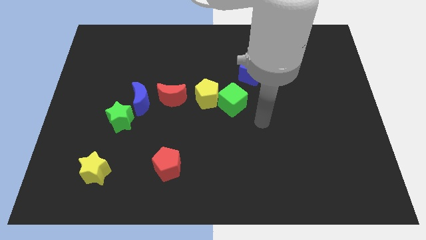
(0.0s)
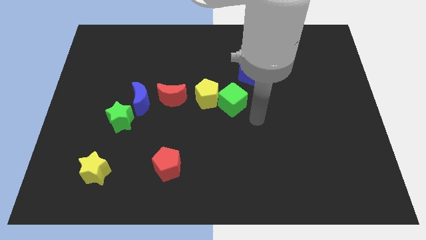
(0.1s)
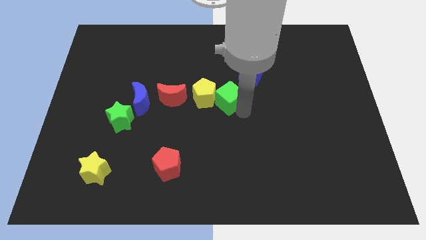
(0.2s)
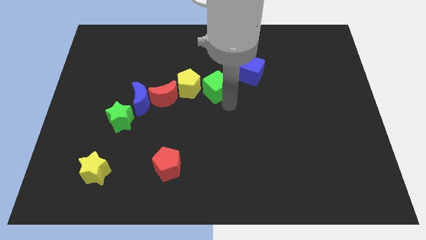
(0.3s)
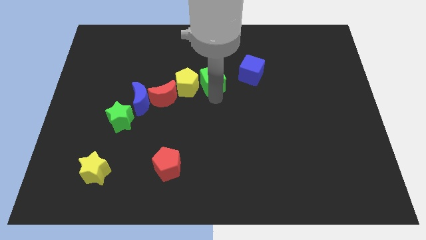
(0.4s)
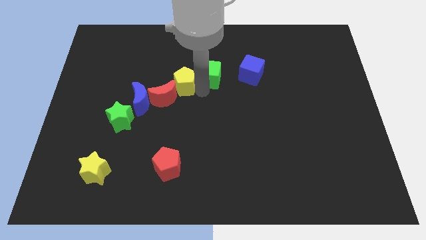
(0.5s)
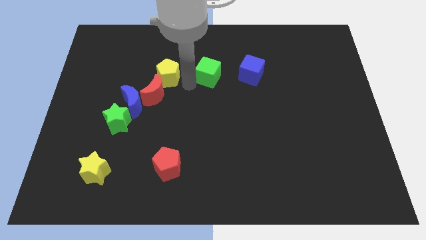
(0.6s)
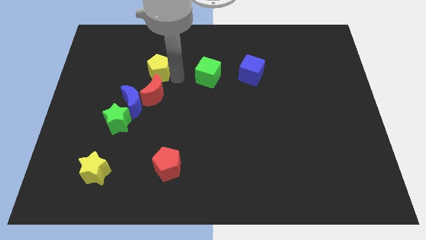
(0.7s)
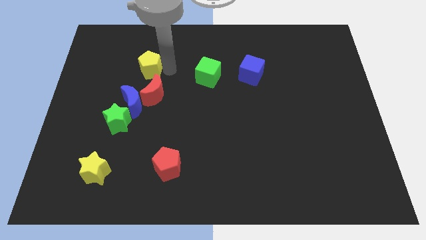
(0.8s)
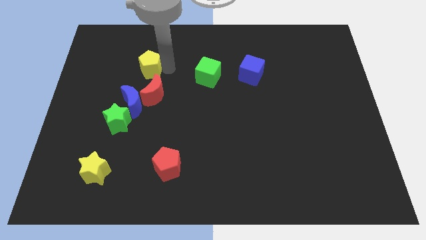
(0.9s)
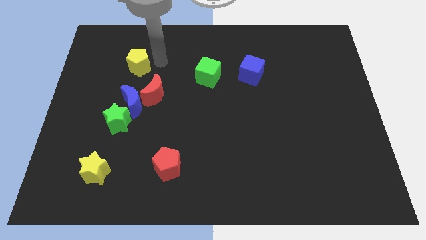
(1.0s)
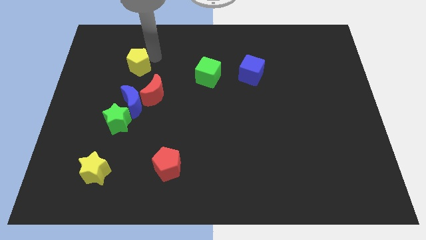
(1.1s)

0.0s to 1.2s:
separate yellow pentagon from the green cube

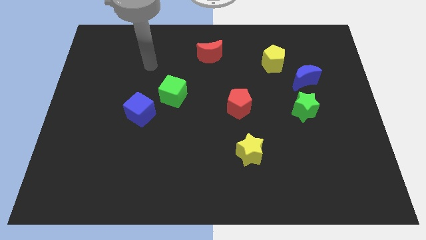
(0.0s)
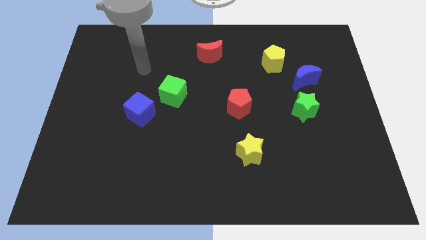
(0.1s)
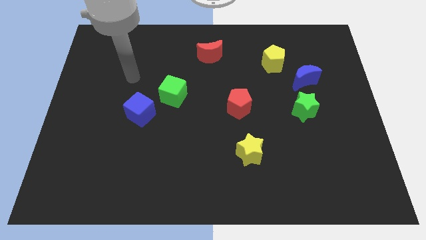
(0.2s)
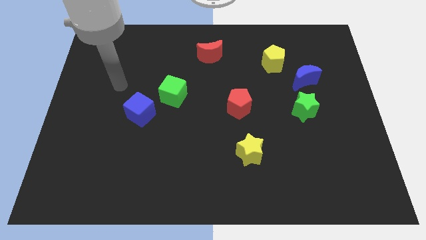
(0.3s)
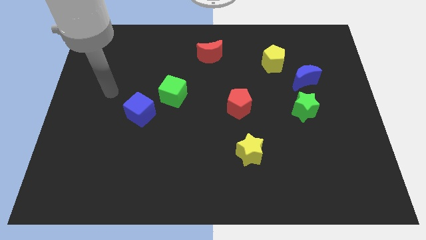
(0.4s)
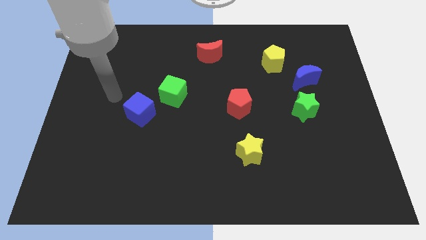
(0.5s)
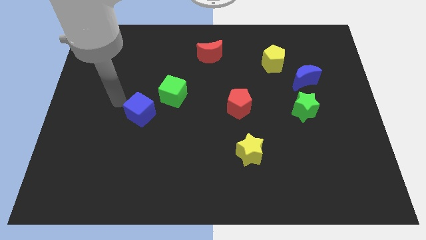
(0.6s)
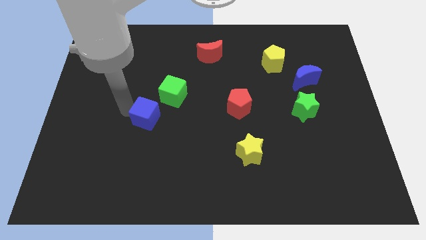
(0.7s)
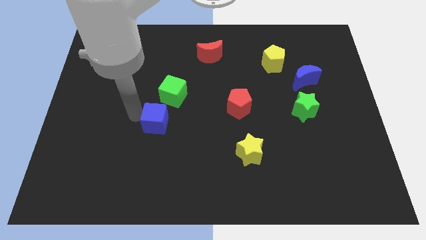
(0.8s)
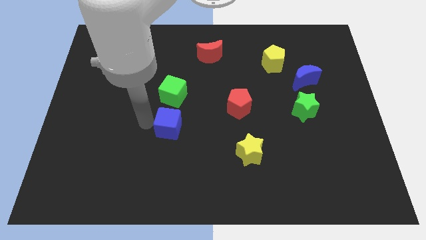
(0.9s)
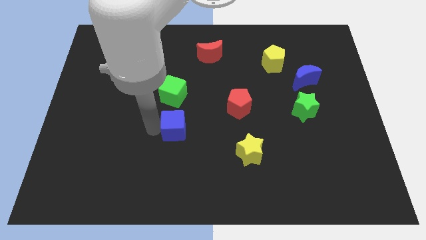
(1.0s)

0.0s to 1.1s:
put the blue cube below the green cube

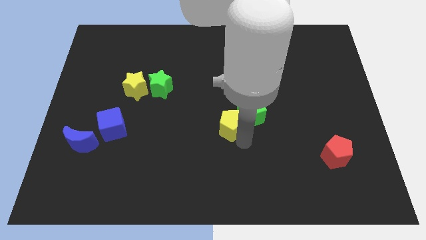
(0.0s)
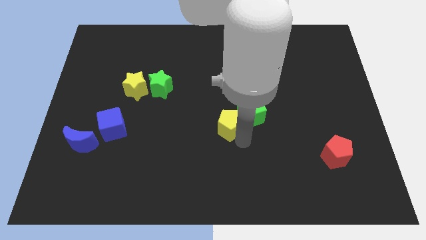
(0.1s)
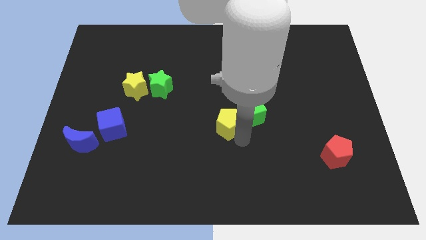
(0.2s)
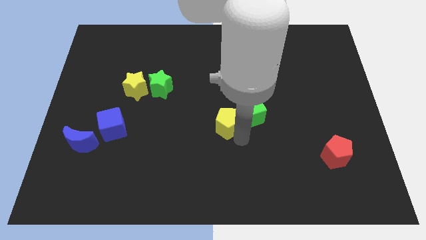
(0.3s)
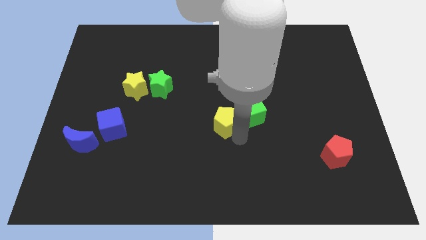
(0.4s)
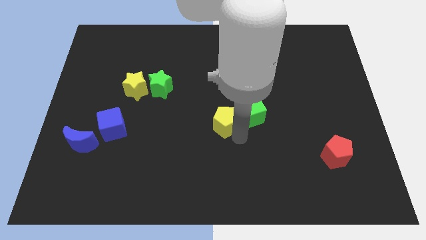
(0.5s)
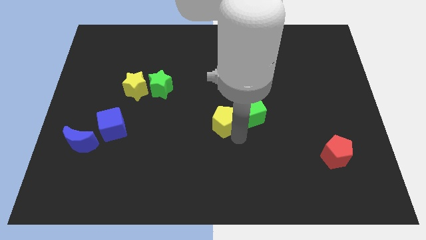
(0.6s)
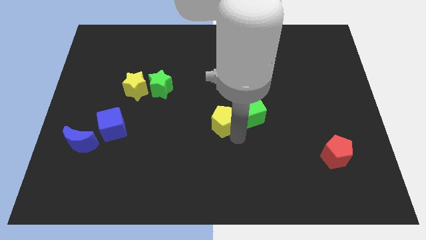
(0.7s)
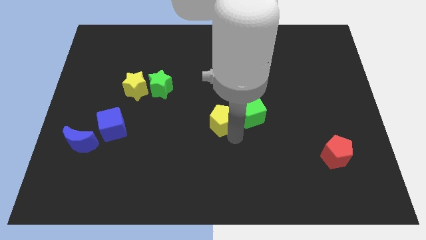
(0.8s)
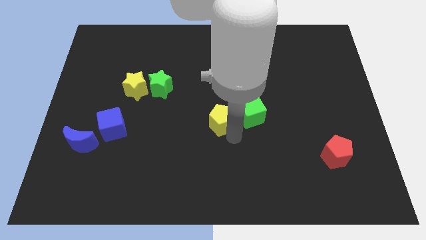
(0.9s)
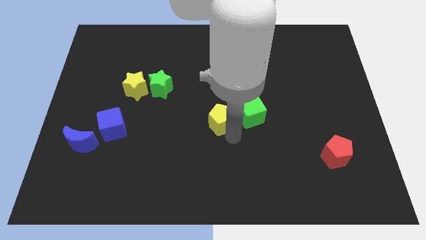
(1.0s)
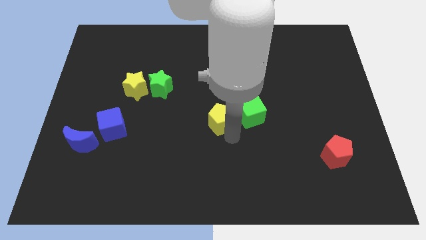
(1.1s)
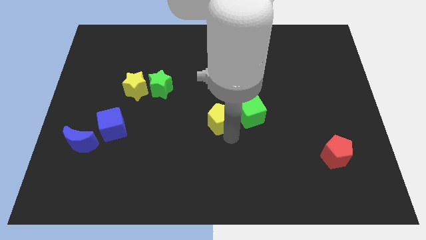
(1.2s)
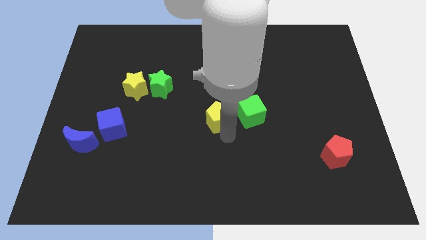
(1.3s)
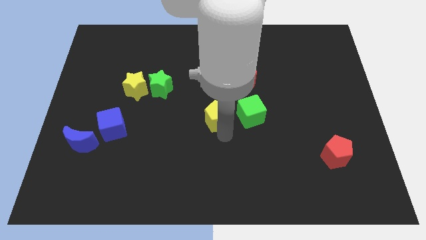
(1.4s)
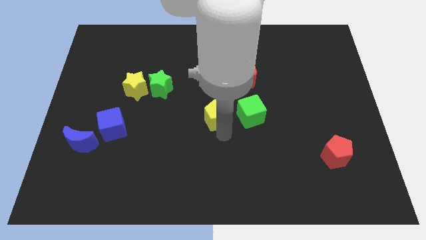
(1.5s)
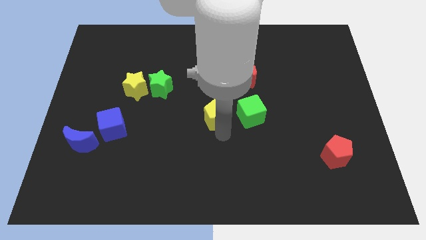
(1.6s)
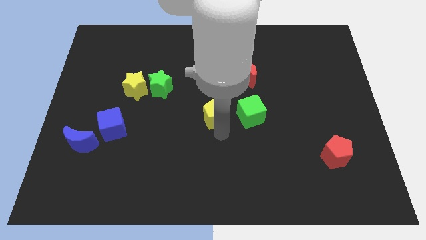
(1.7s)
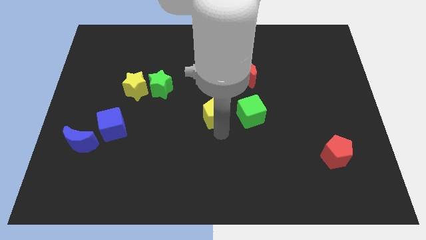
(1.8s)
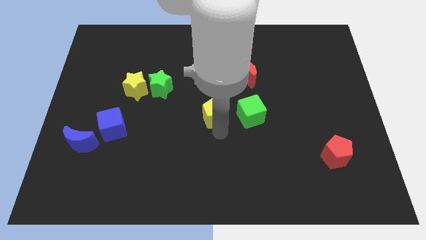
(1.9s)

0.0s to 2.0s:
move the yellow pentagon away from the left side of the green cube

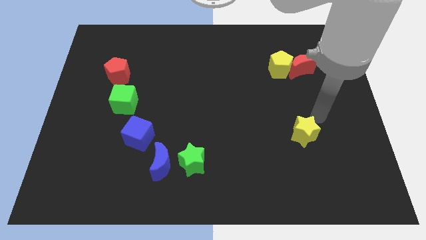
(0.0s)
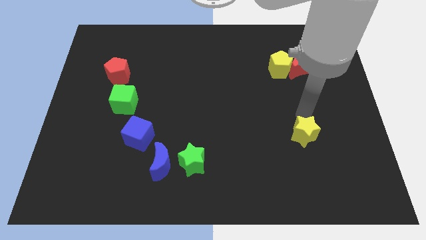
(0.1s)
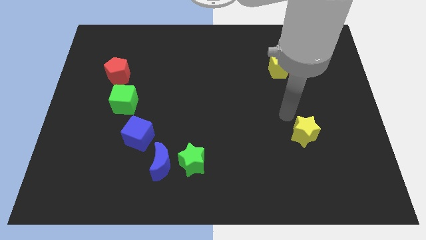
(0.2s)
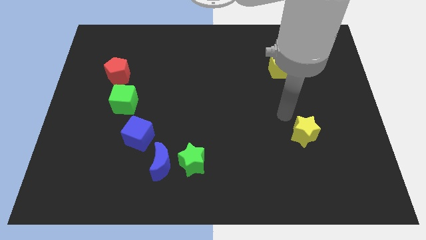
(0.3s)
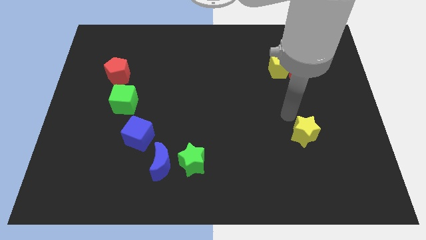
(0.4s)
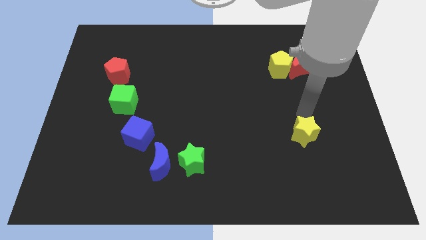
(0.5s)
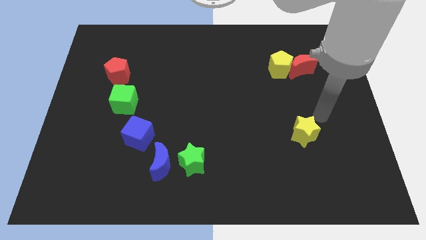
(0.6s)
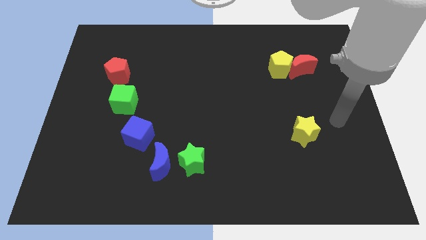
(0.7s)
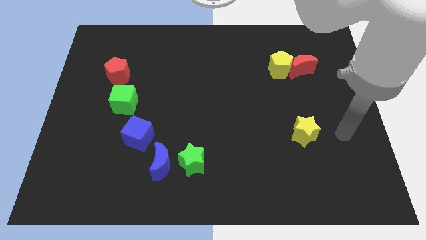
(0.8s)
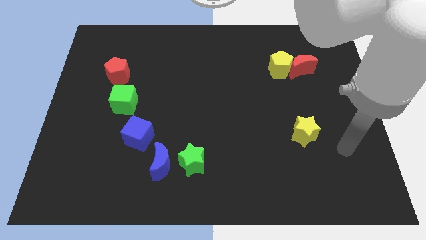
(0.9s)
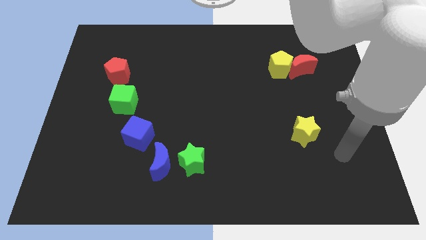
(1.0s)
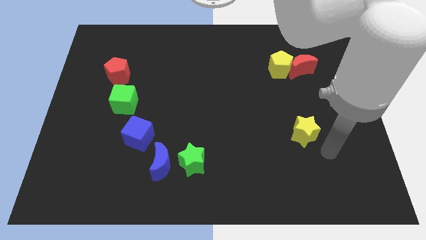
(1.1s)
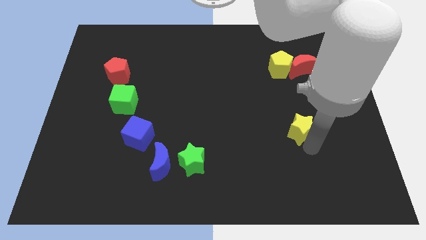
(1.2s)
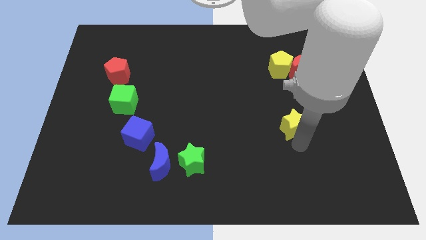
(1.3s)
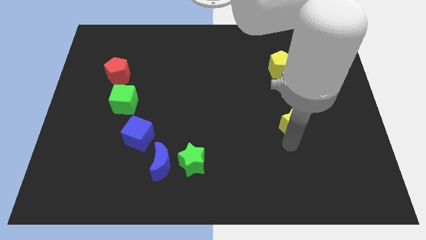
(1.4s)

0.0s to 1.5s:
push yellow star below yellow pentagon

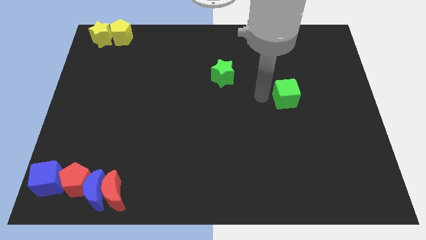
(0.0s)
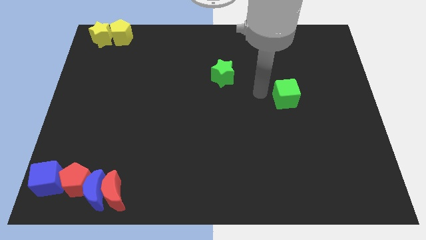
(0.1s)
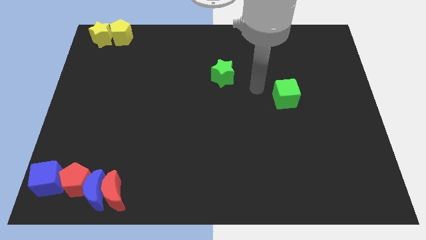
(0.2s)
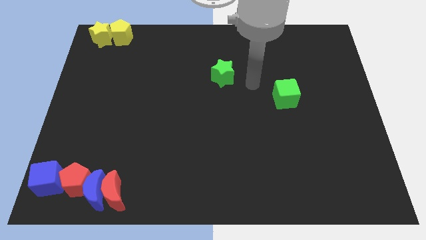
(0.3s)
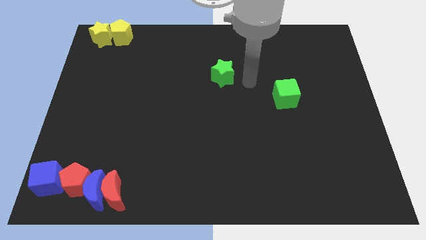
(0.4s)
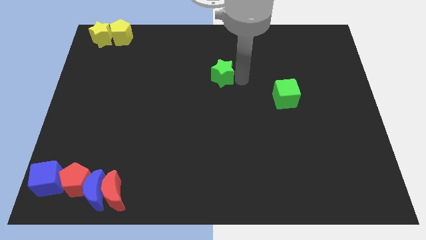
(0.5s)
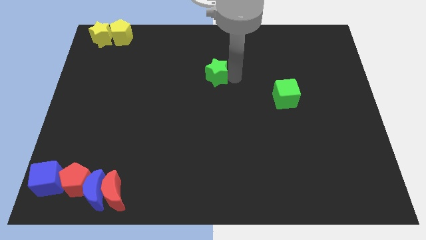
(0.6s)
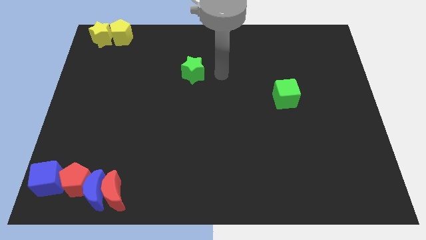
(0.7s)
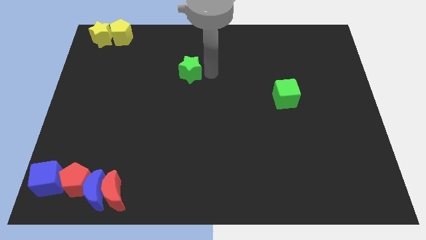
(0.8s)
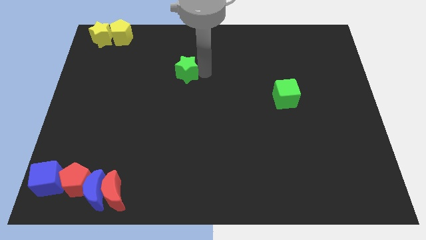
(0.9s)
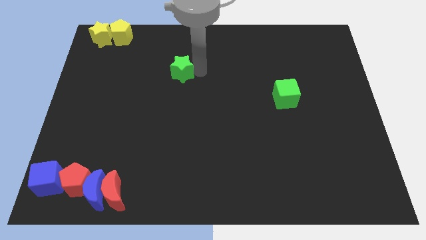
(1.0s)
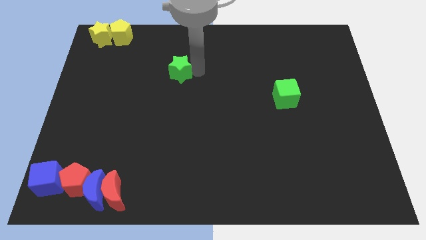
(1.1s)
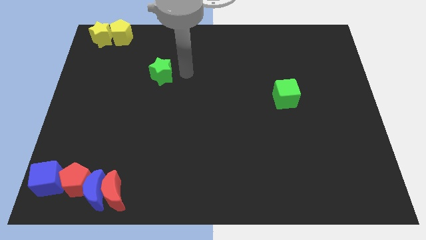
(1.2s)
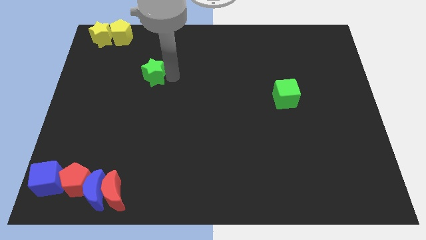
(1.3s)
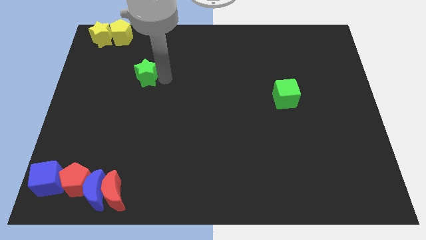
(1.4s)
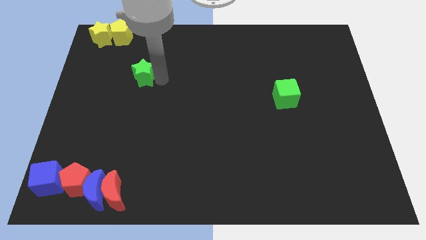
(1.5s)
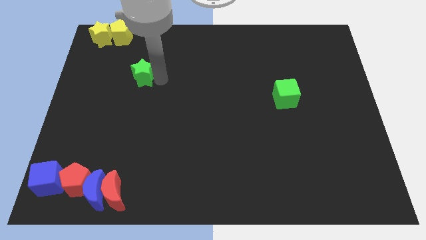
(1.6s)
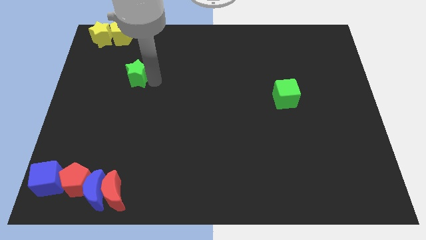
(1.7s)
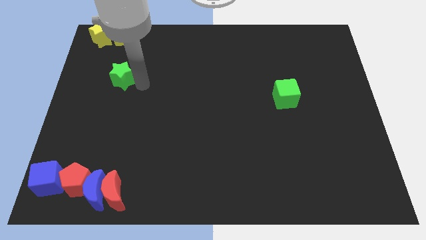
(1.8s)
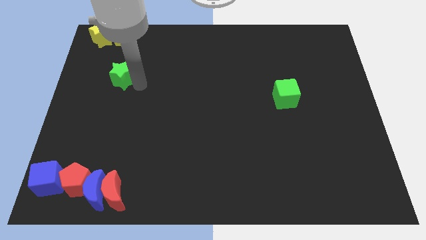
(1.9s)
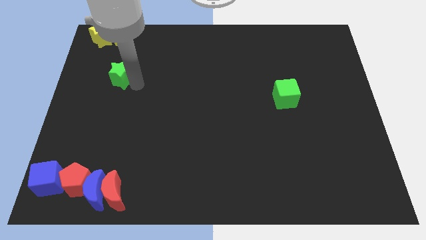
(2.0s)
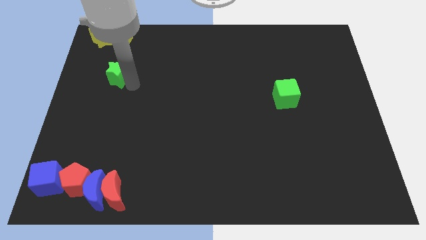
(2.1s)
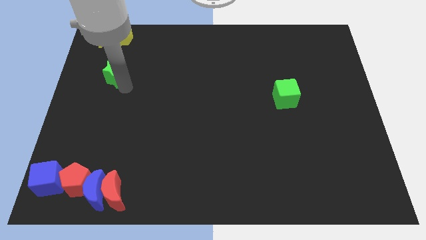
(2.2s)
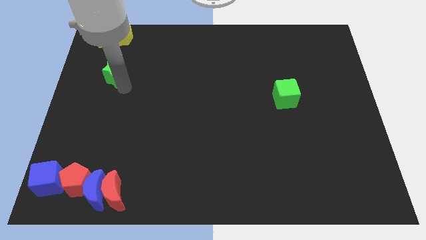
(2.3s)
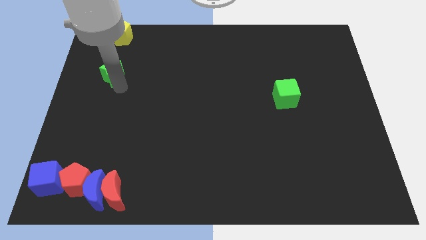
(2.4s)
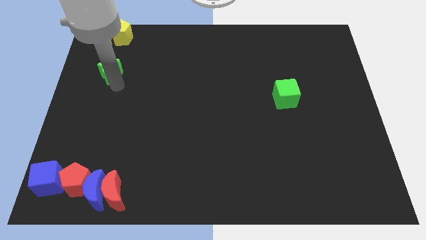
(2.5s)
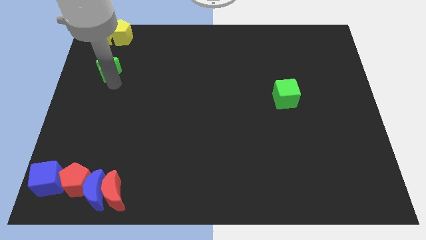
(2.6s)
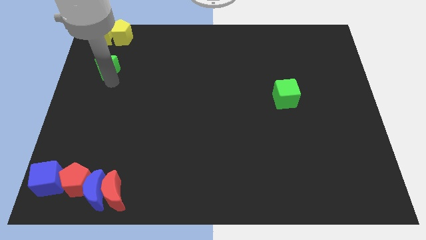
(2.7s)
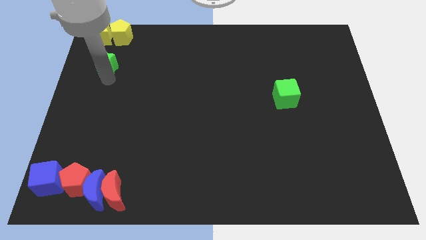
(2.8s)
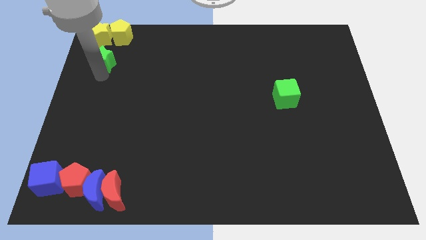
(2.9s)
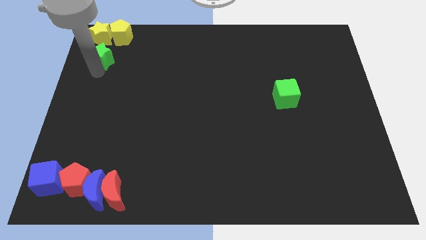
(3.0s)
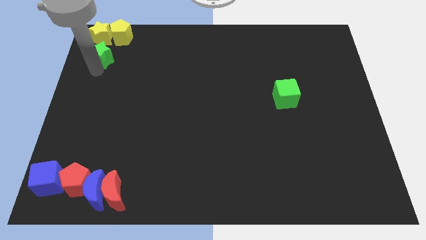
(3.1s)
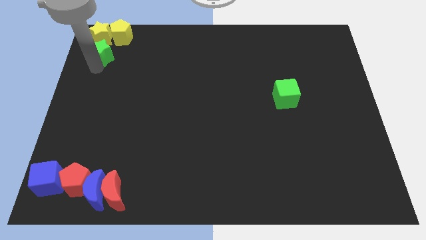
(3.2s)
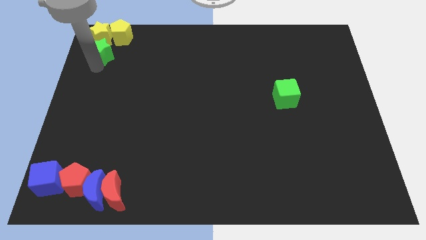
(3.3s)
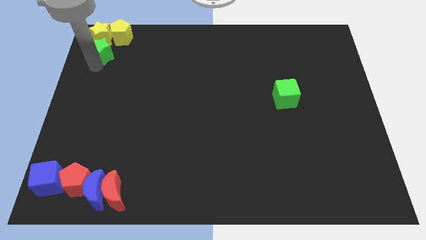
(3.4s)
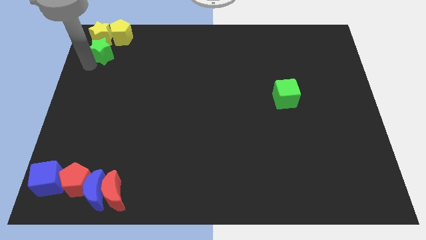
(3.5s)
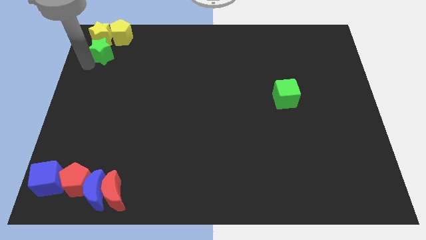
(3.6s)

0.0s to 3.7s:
place green star below yellow star
